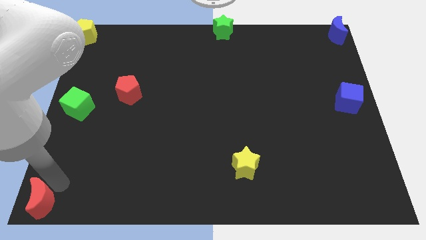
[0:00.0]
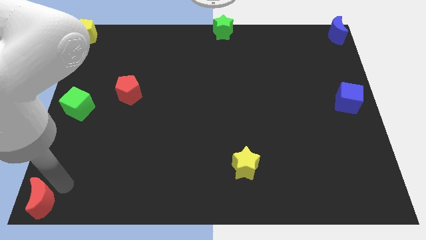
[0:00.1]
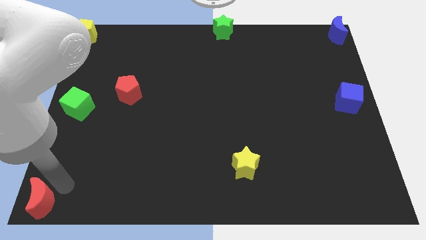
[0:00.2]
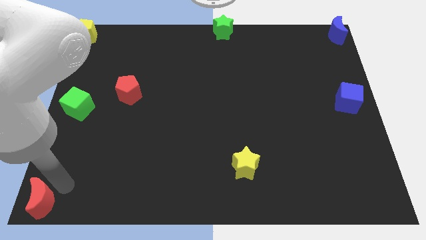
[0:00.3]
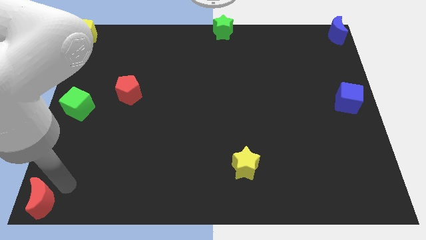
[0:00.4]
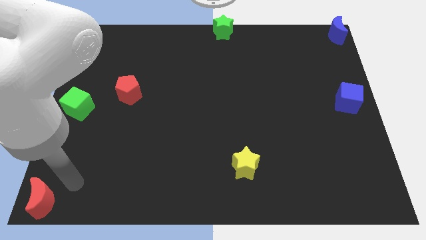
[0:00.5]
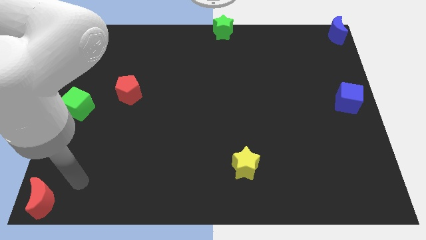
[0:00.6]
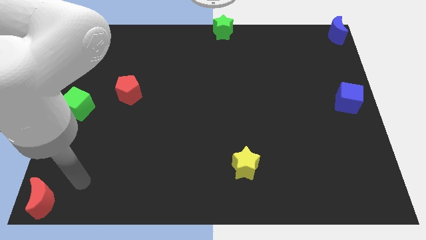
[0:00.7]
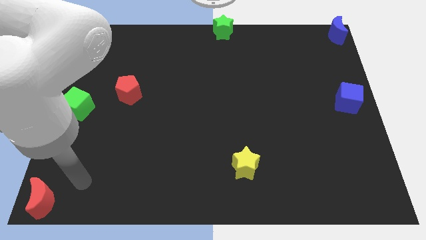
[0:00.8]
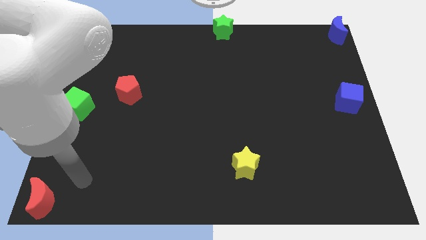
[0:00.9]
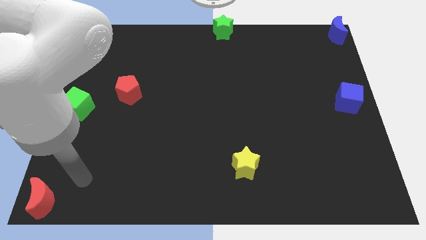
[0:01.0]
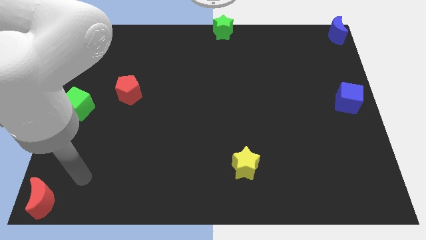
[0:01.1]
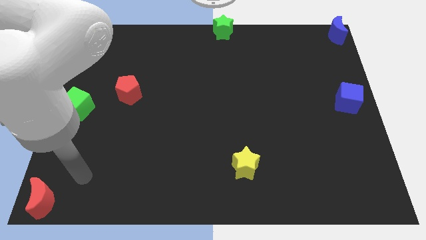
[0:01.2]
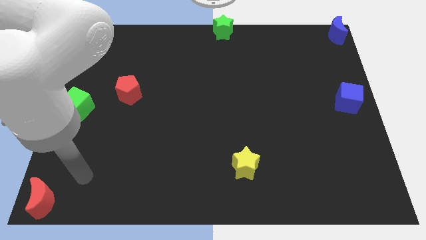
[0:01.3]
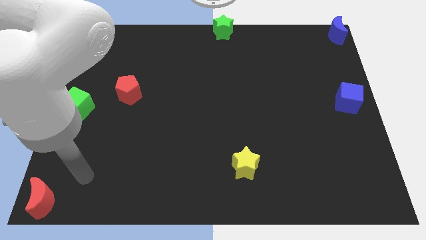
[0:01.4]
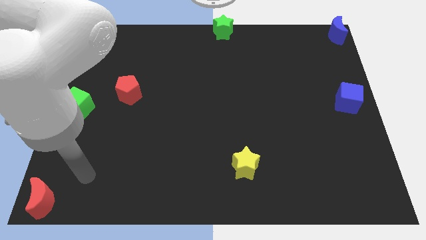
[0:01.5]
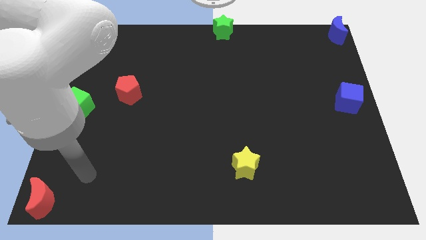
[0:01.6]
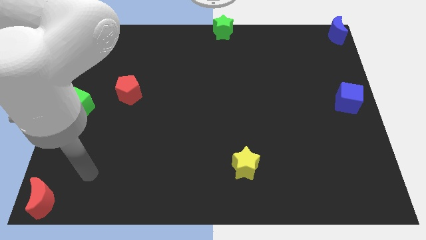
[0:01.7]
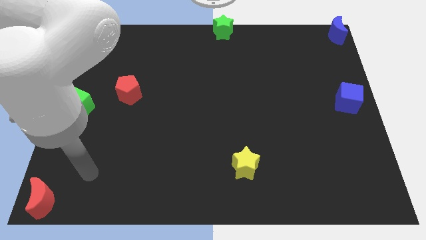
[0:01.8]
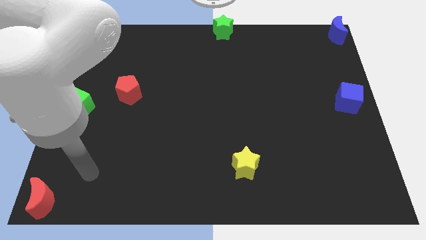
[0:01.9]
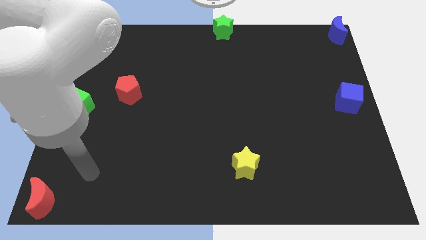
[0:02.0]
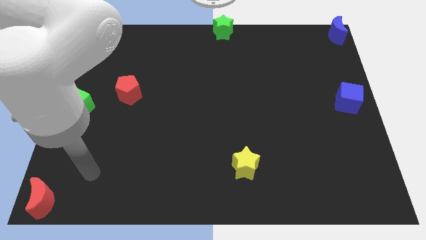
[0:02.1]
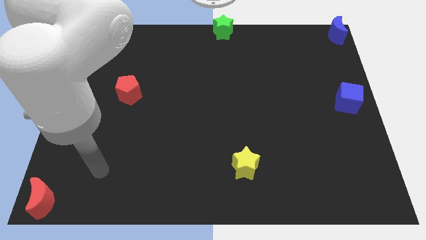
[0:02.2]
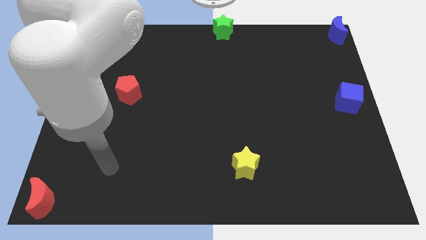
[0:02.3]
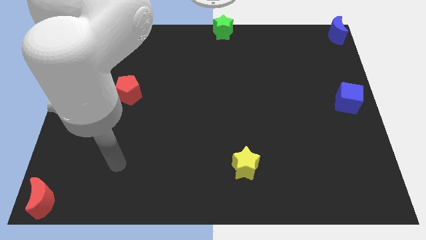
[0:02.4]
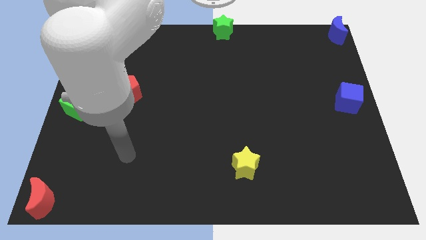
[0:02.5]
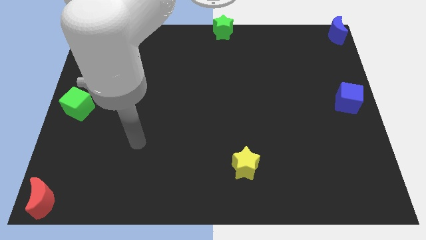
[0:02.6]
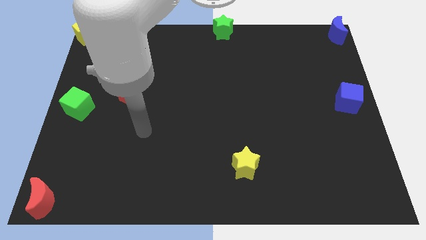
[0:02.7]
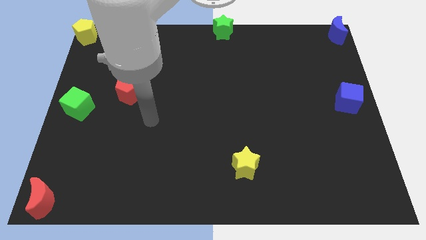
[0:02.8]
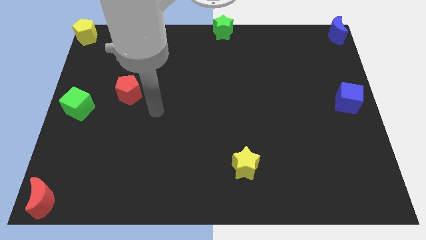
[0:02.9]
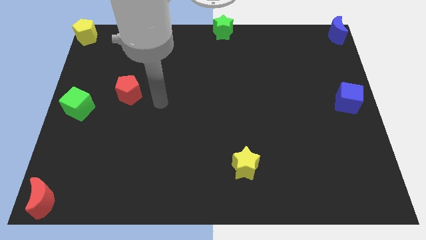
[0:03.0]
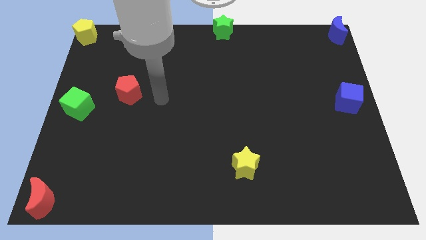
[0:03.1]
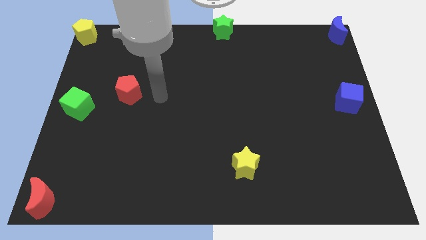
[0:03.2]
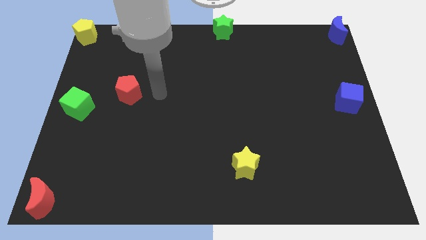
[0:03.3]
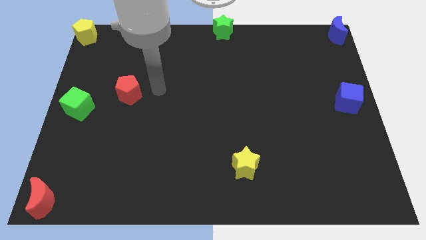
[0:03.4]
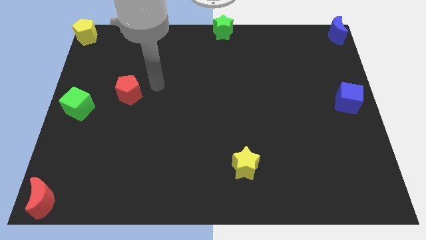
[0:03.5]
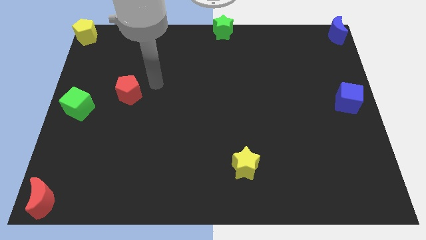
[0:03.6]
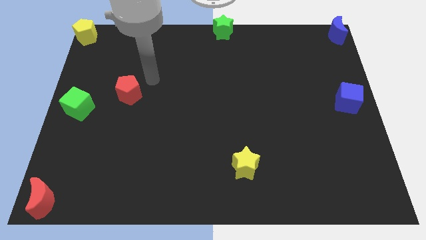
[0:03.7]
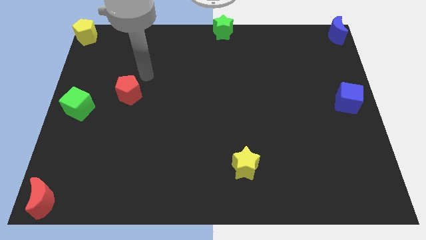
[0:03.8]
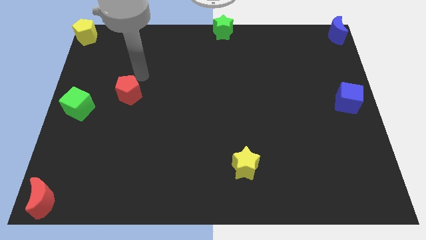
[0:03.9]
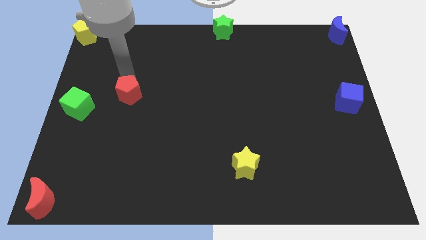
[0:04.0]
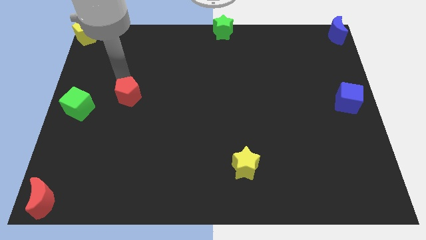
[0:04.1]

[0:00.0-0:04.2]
move your arm towards the red pentagon

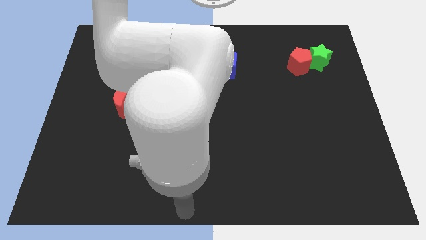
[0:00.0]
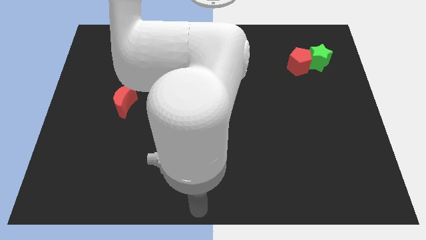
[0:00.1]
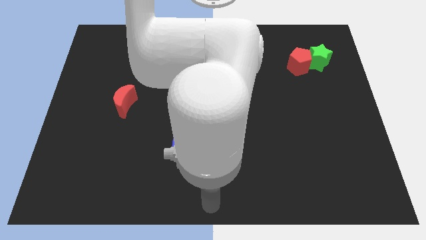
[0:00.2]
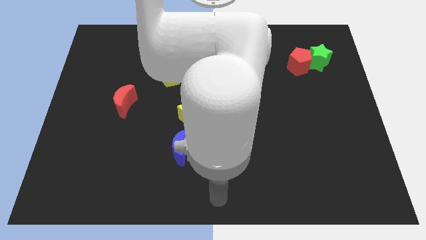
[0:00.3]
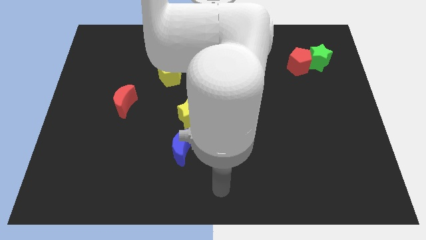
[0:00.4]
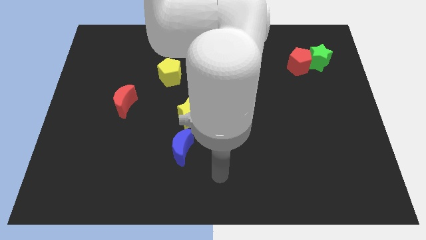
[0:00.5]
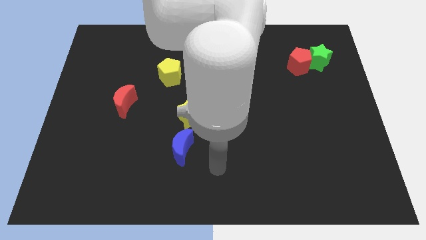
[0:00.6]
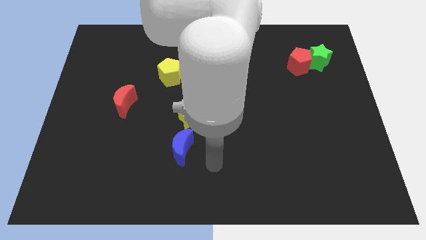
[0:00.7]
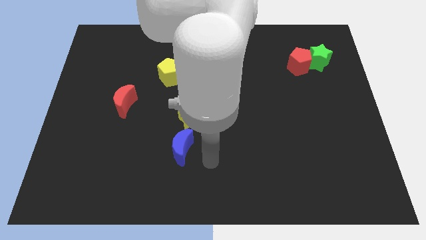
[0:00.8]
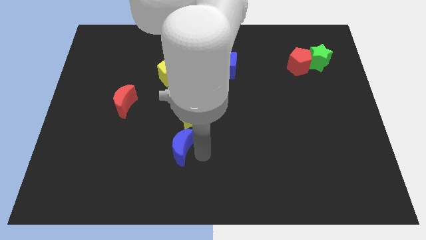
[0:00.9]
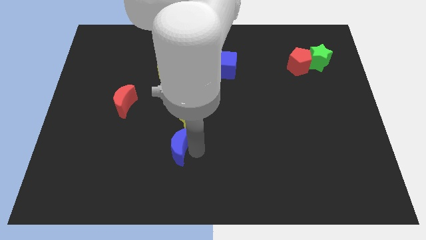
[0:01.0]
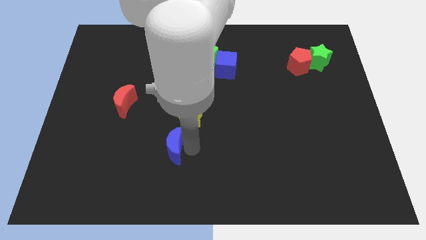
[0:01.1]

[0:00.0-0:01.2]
point your arm to the blue moon

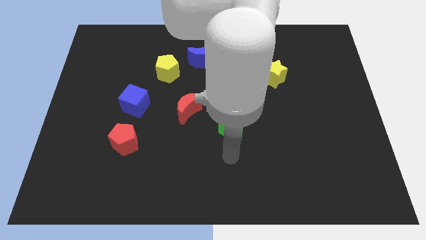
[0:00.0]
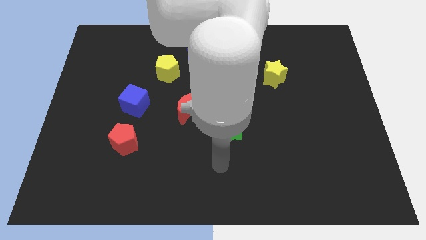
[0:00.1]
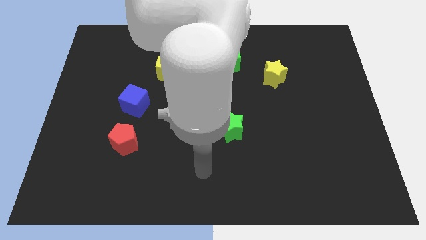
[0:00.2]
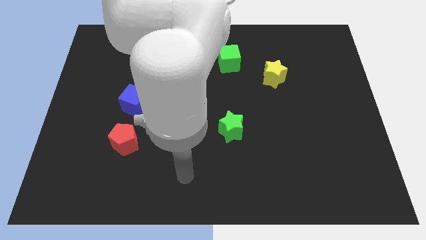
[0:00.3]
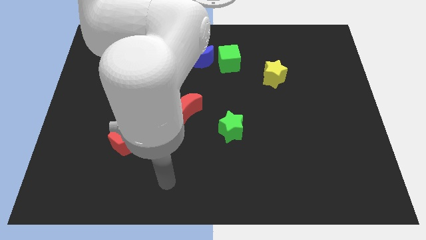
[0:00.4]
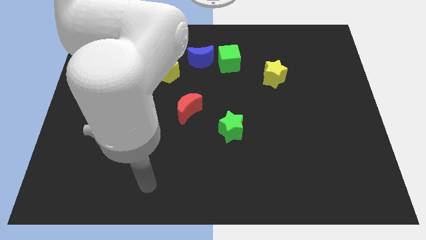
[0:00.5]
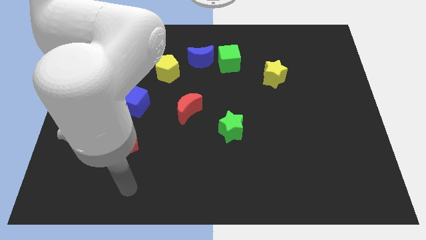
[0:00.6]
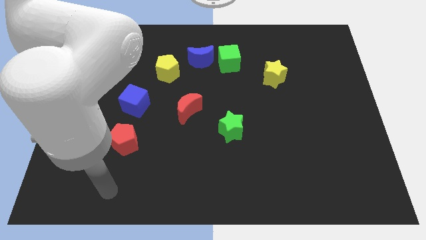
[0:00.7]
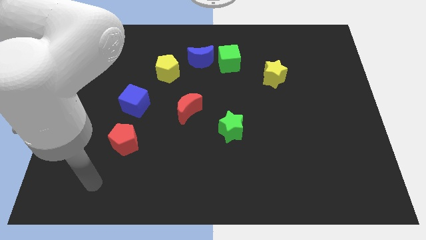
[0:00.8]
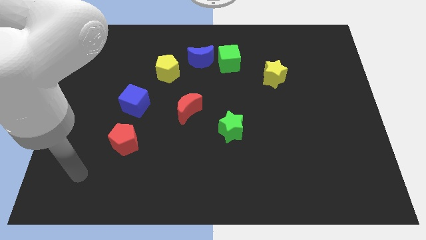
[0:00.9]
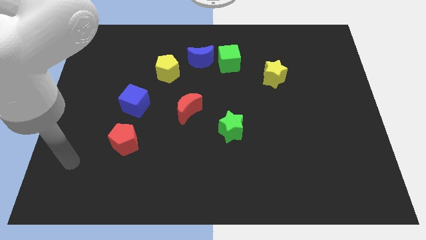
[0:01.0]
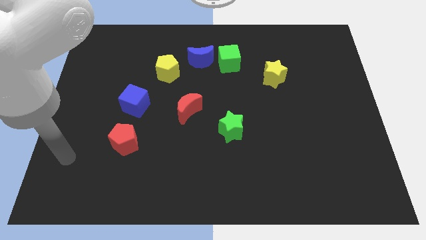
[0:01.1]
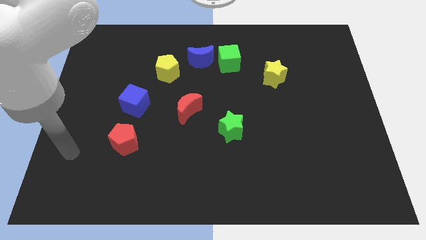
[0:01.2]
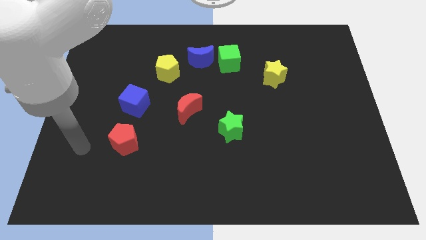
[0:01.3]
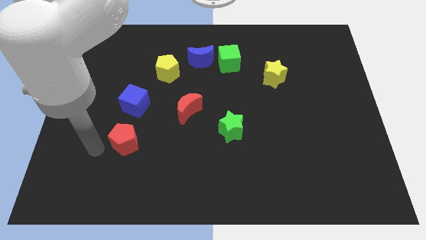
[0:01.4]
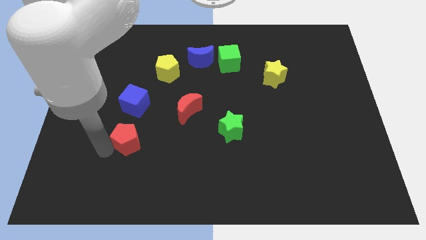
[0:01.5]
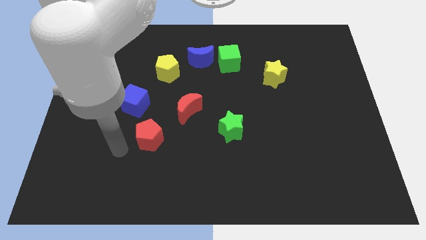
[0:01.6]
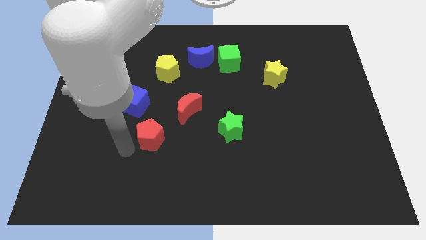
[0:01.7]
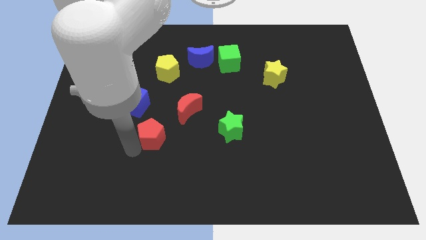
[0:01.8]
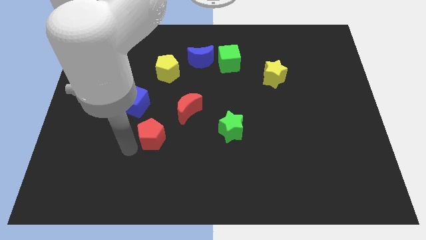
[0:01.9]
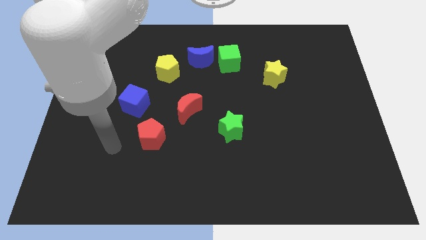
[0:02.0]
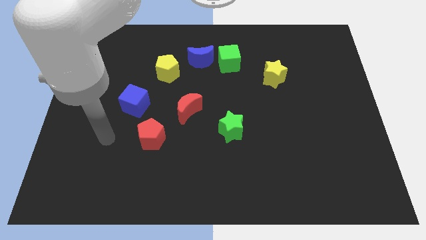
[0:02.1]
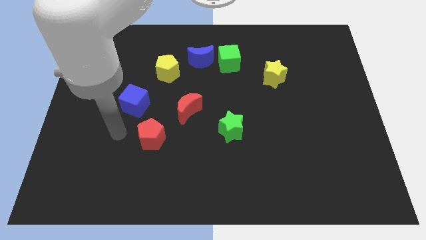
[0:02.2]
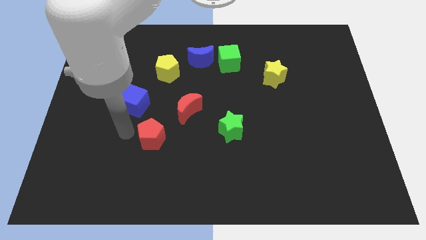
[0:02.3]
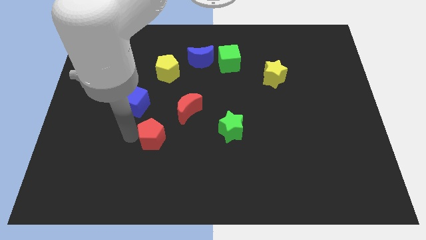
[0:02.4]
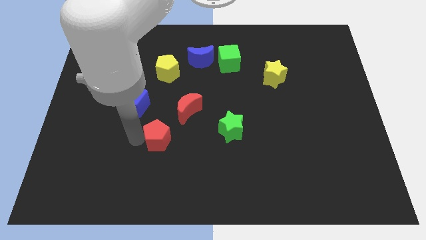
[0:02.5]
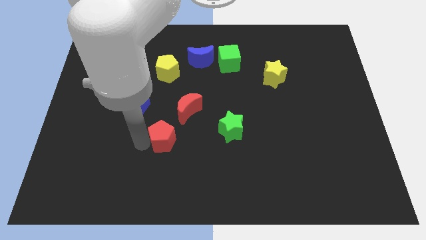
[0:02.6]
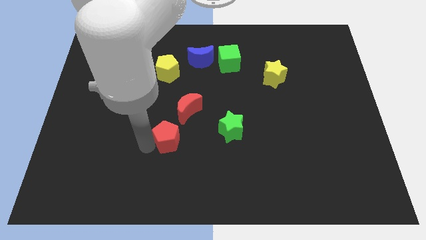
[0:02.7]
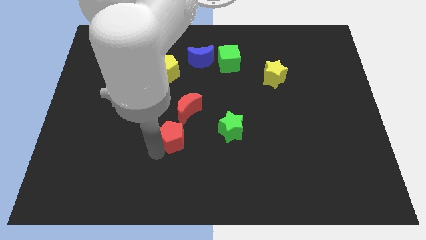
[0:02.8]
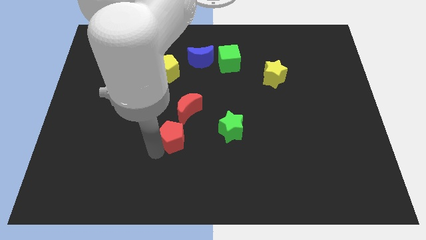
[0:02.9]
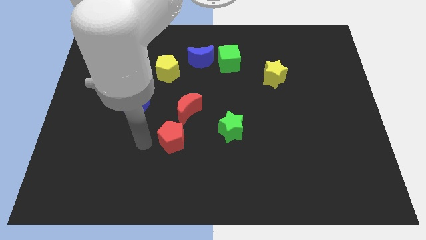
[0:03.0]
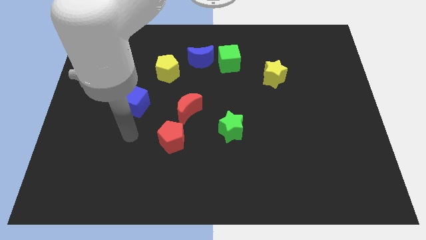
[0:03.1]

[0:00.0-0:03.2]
move the red pentagon into the red moon

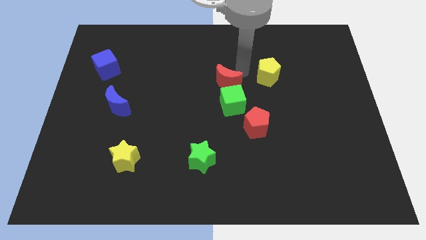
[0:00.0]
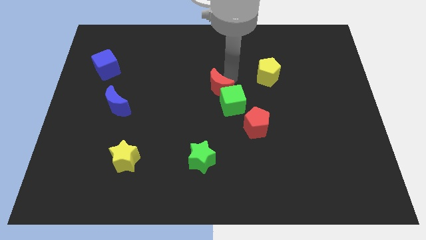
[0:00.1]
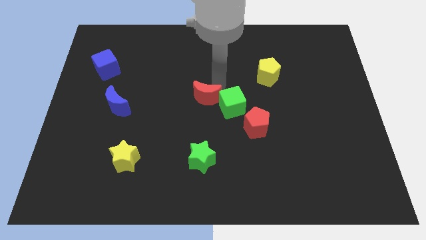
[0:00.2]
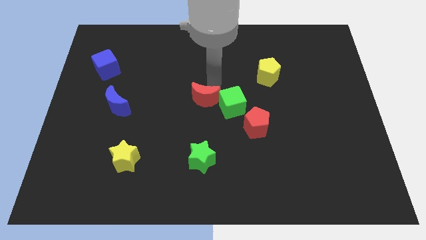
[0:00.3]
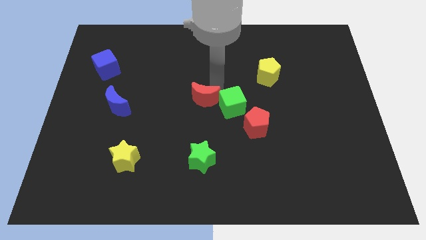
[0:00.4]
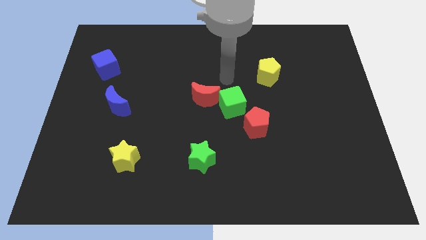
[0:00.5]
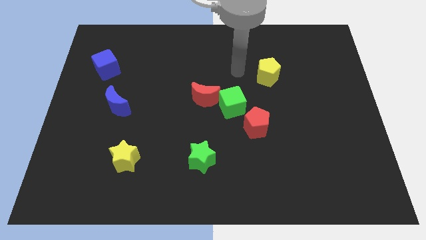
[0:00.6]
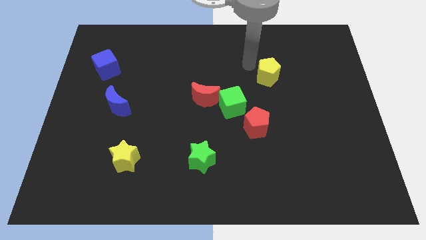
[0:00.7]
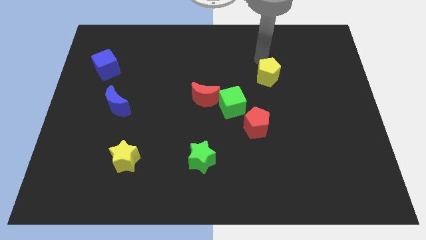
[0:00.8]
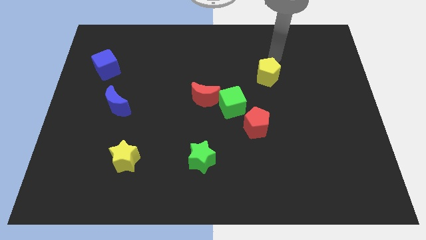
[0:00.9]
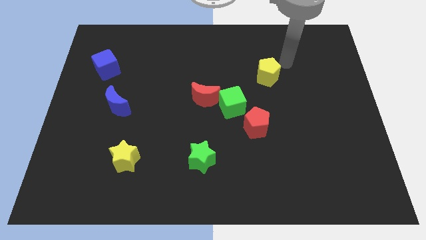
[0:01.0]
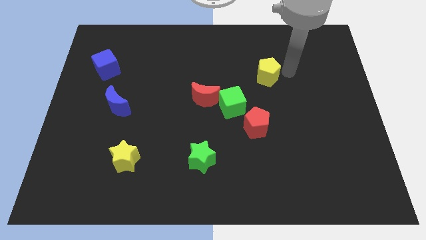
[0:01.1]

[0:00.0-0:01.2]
move the red crescent to the center of the board
